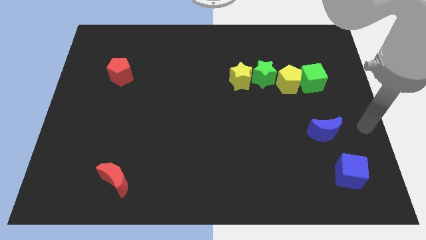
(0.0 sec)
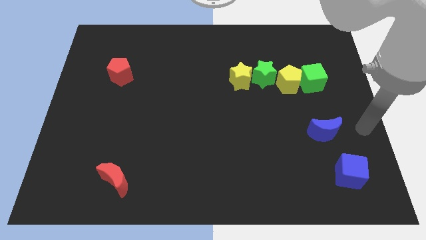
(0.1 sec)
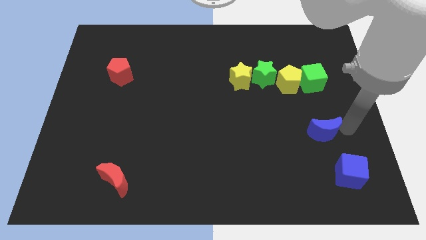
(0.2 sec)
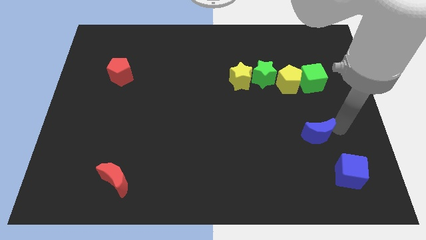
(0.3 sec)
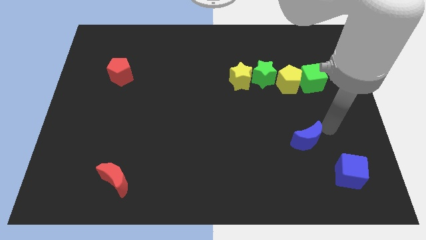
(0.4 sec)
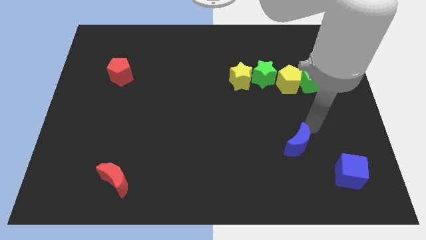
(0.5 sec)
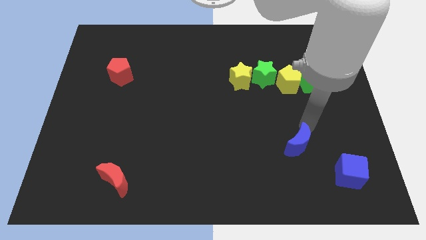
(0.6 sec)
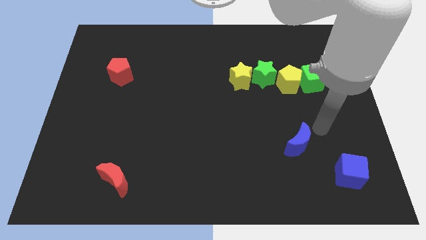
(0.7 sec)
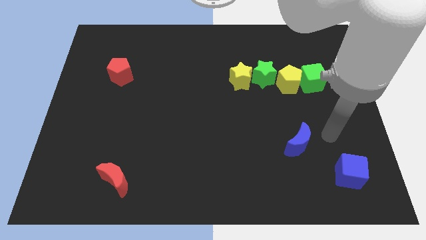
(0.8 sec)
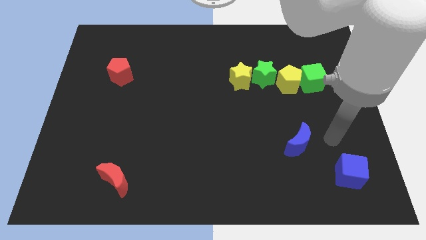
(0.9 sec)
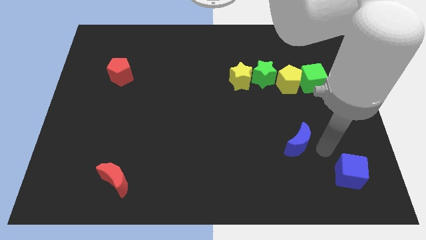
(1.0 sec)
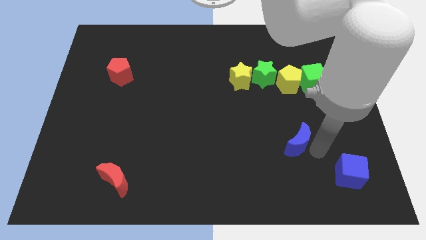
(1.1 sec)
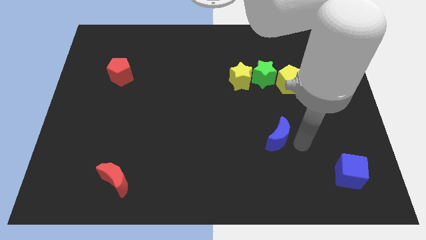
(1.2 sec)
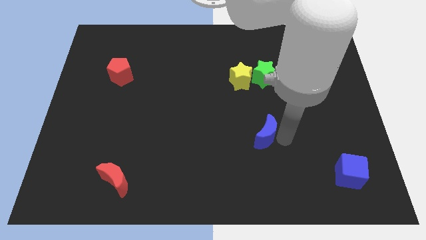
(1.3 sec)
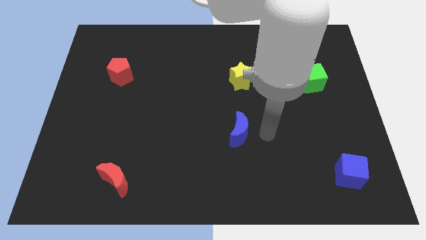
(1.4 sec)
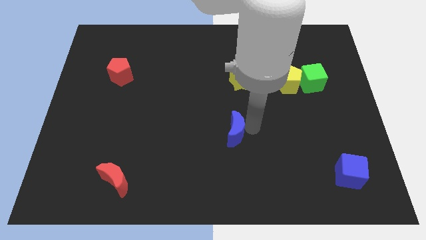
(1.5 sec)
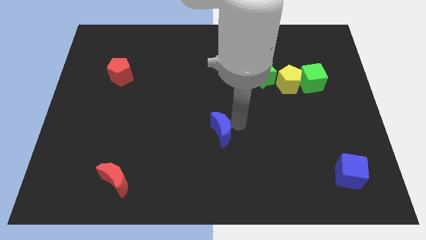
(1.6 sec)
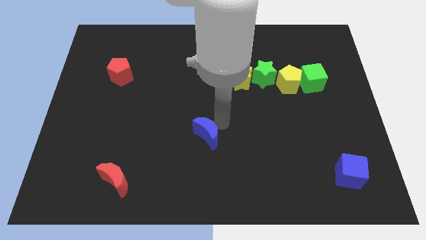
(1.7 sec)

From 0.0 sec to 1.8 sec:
push the blue crescent to the centre of the board

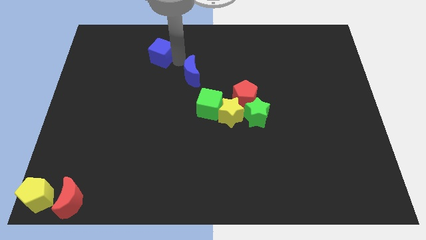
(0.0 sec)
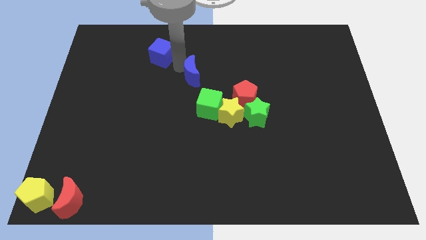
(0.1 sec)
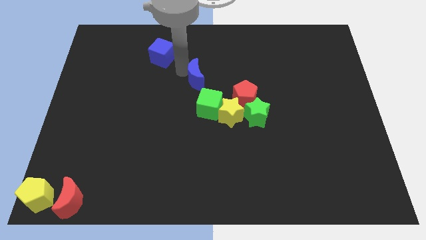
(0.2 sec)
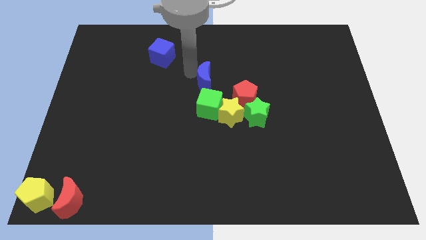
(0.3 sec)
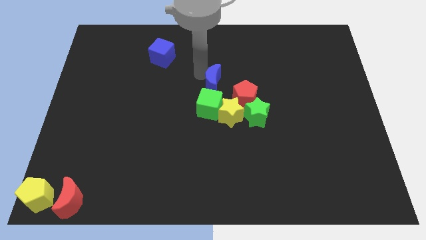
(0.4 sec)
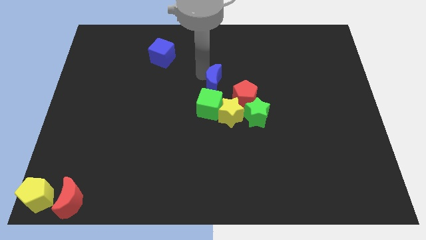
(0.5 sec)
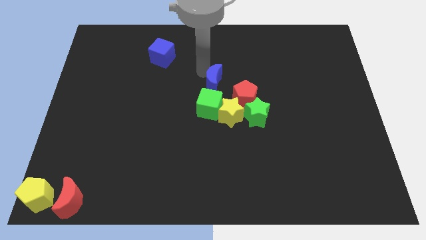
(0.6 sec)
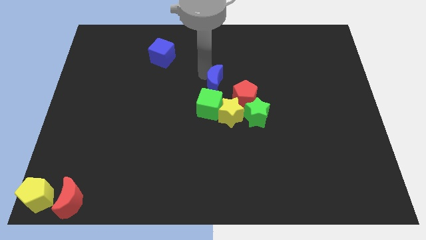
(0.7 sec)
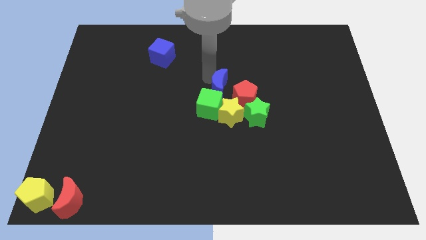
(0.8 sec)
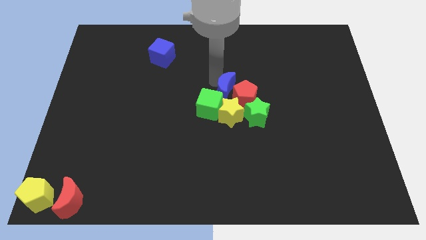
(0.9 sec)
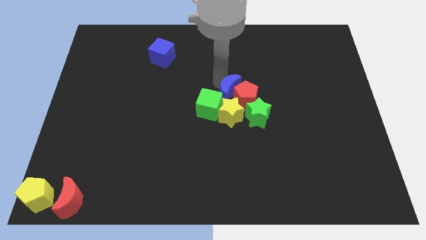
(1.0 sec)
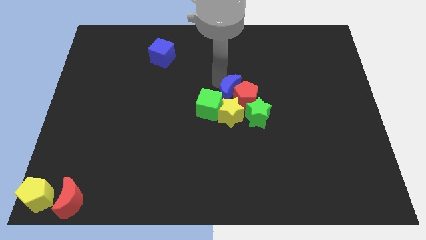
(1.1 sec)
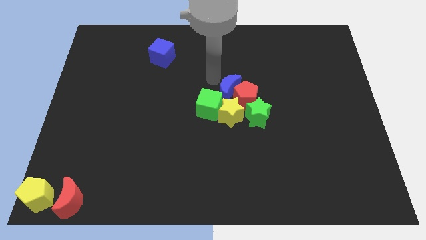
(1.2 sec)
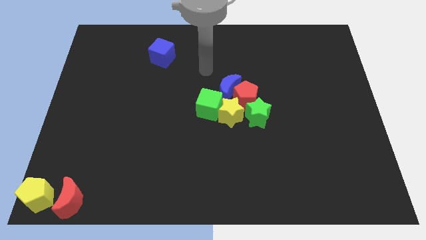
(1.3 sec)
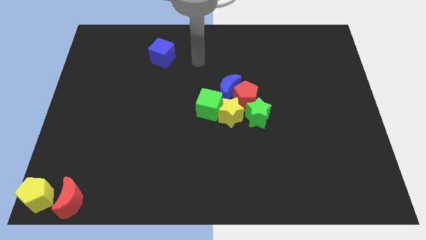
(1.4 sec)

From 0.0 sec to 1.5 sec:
move the blue moon into the red pentagon

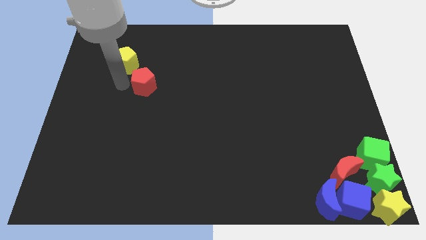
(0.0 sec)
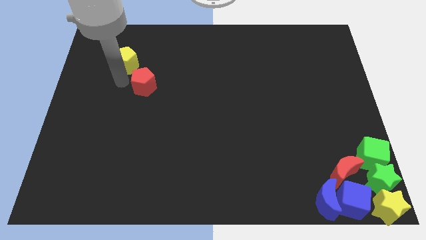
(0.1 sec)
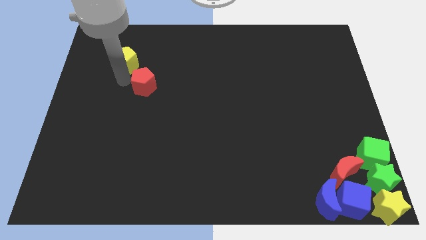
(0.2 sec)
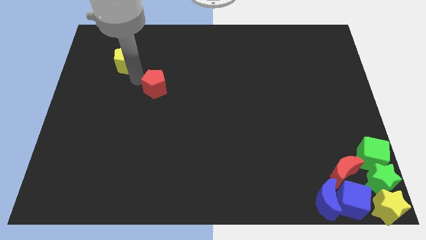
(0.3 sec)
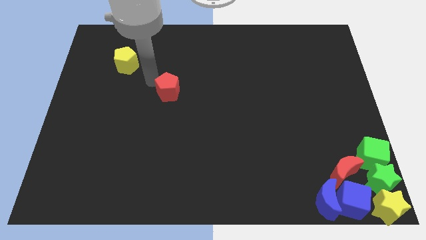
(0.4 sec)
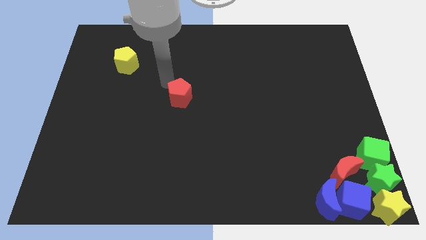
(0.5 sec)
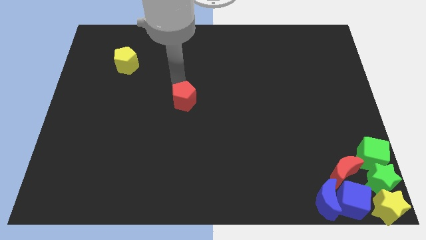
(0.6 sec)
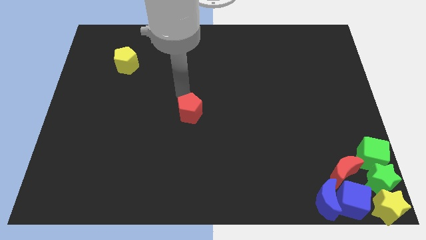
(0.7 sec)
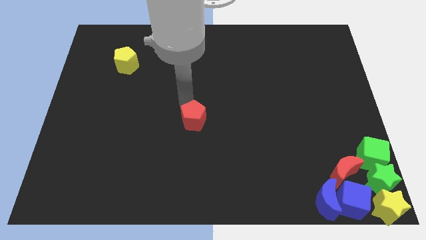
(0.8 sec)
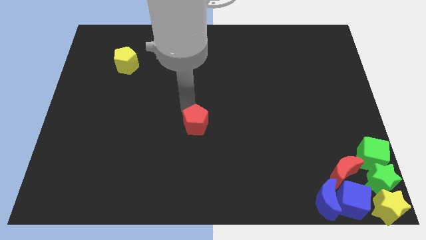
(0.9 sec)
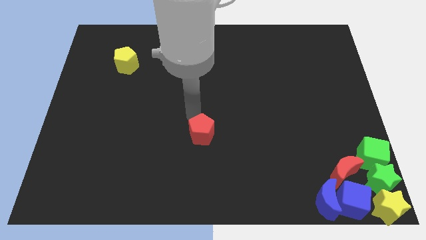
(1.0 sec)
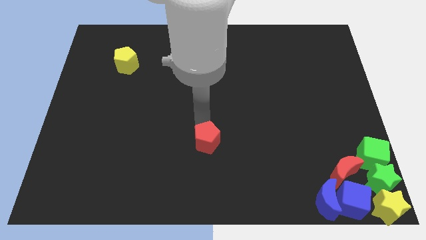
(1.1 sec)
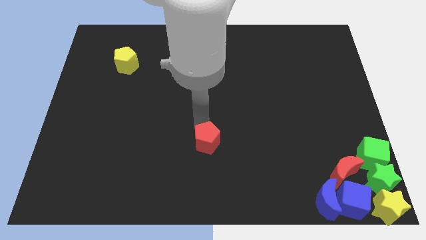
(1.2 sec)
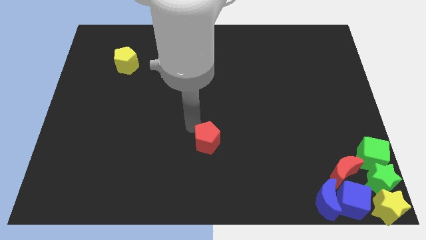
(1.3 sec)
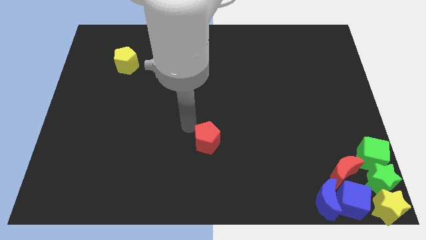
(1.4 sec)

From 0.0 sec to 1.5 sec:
move red pentagon towards the bottom center of the board

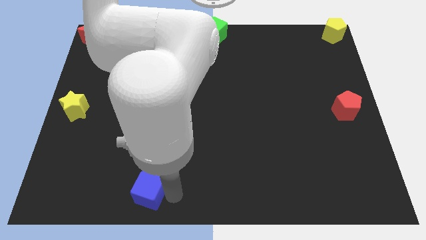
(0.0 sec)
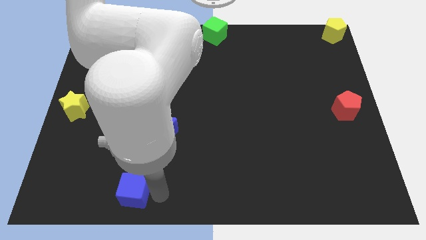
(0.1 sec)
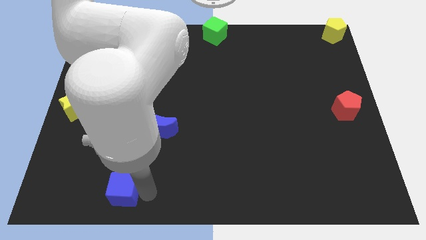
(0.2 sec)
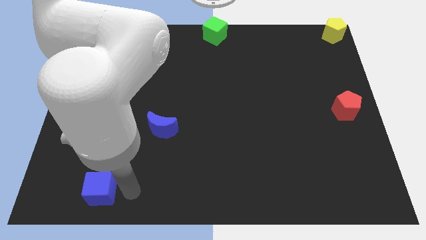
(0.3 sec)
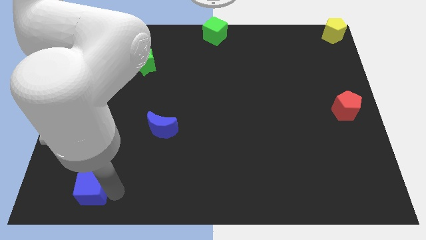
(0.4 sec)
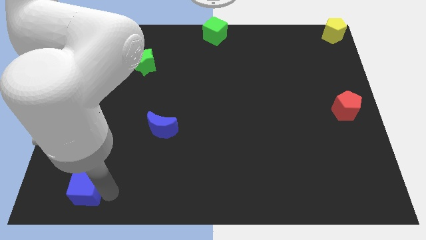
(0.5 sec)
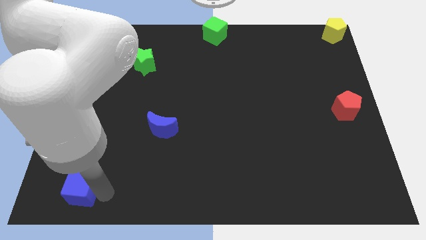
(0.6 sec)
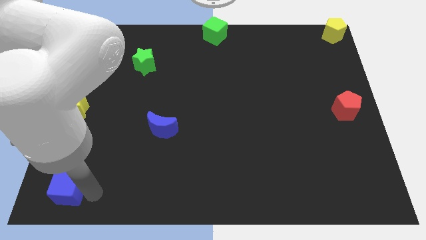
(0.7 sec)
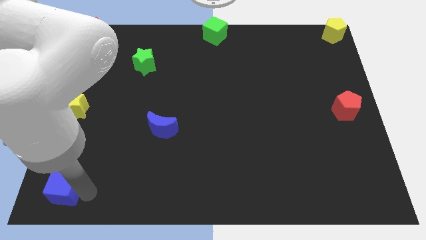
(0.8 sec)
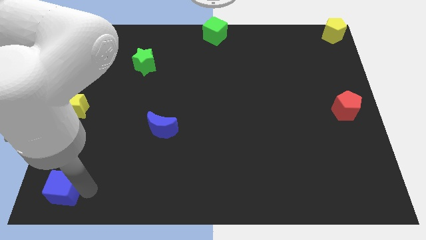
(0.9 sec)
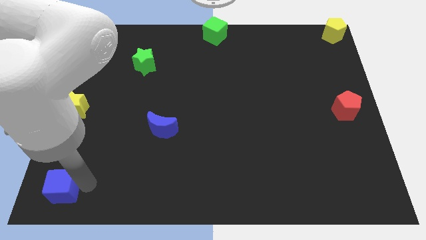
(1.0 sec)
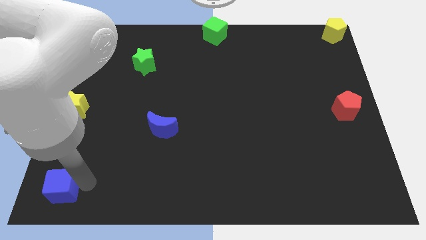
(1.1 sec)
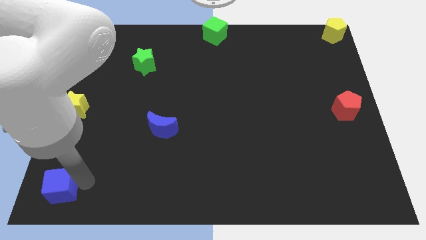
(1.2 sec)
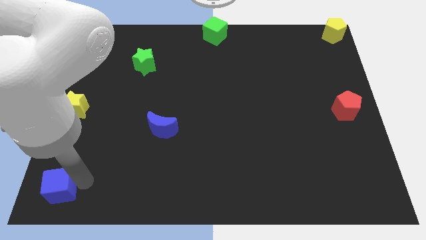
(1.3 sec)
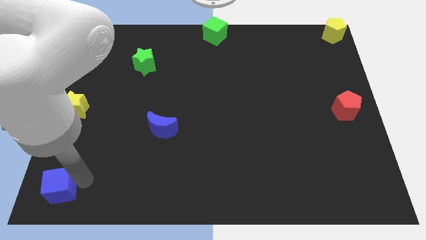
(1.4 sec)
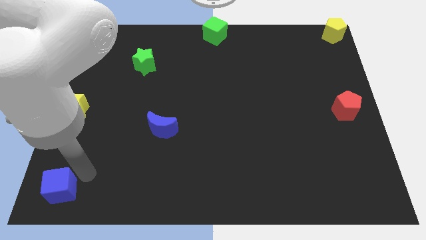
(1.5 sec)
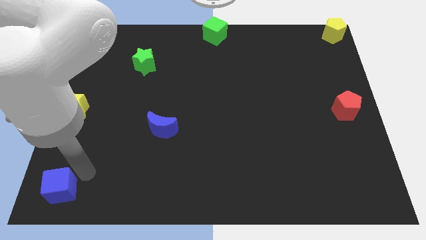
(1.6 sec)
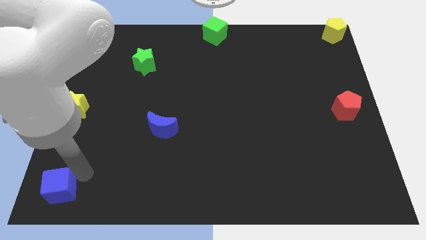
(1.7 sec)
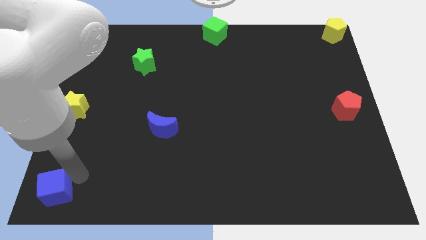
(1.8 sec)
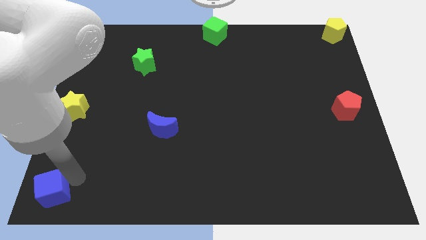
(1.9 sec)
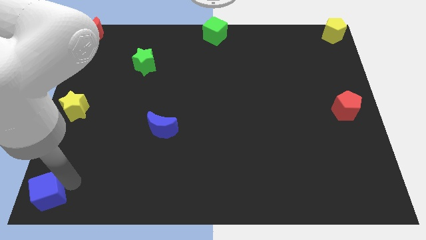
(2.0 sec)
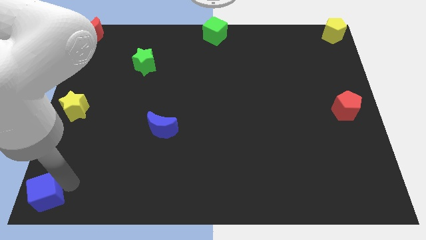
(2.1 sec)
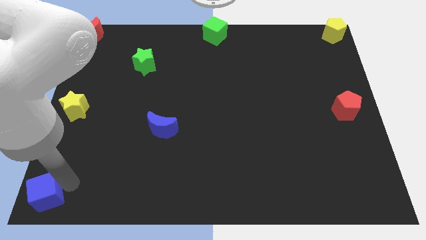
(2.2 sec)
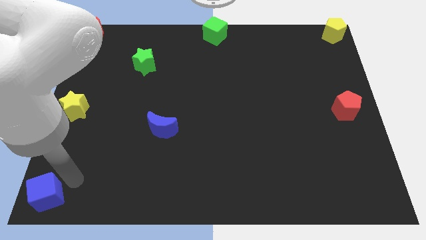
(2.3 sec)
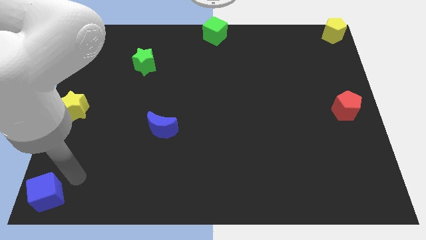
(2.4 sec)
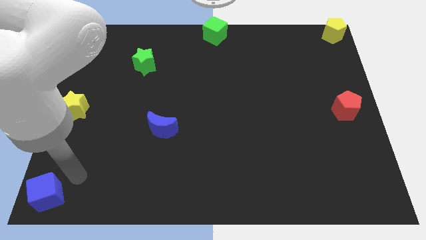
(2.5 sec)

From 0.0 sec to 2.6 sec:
place the blue cube at the bottom left corner

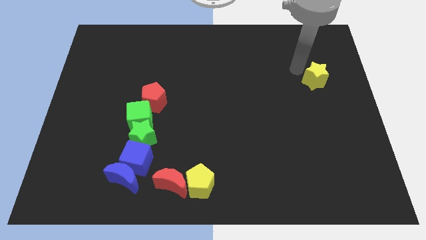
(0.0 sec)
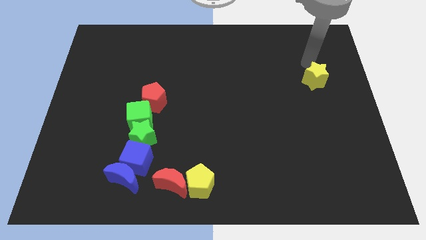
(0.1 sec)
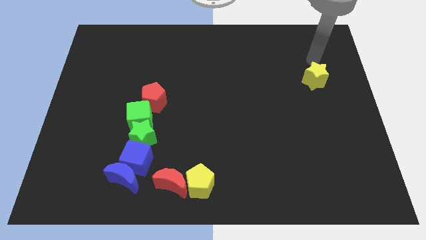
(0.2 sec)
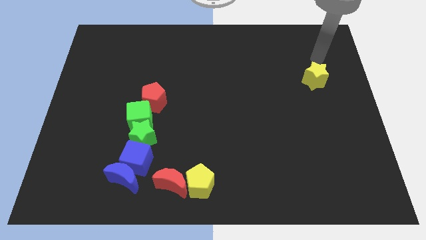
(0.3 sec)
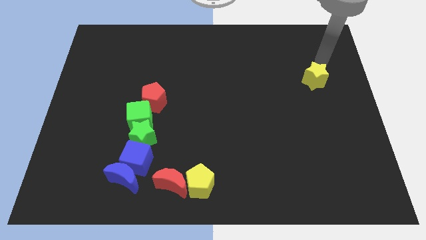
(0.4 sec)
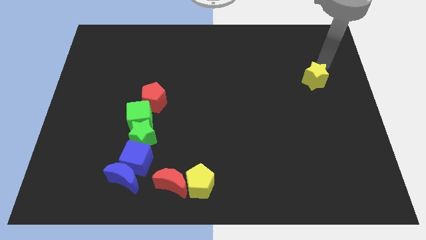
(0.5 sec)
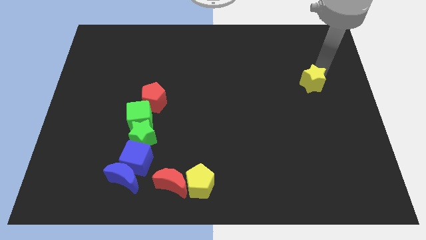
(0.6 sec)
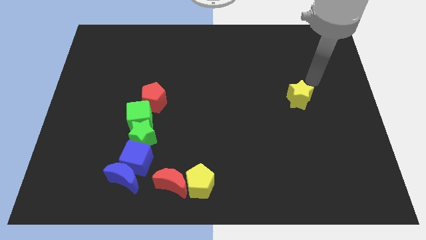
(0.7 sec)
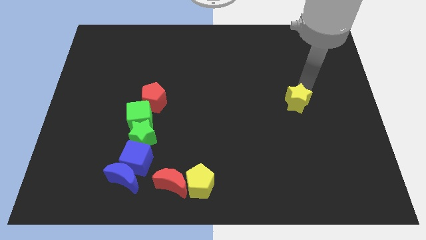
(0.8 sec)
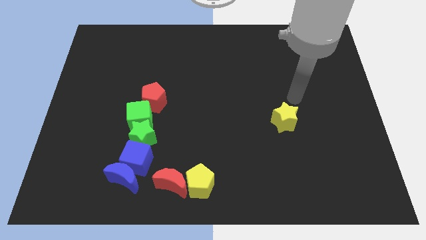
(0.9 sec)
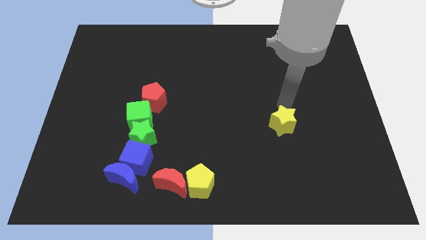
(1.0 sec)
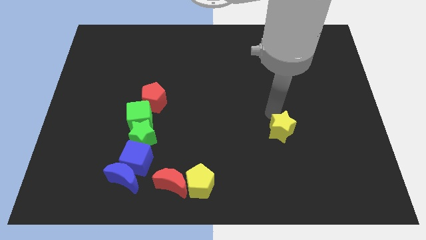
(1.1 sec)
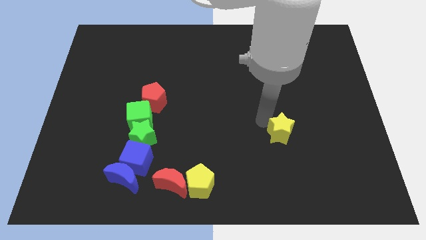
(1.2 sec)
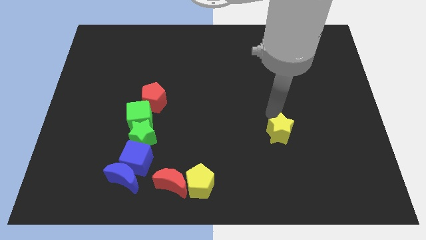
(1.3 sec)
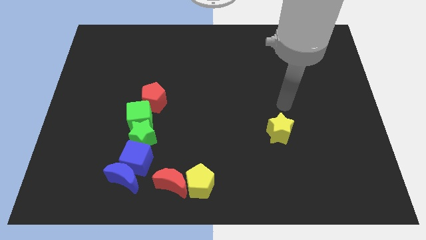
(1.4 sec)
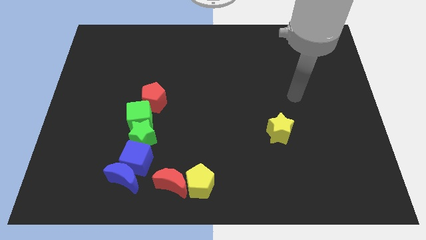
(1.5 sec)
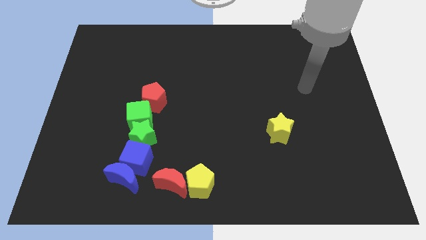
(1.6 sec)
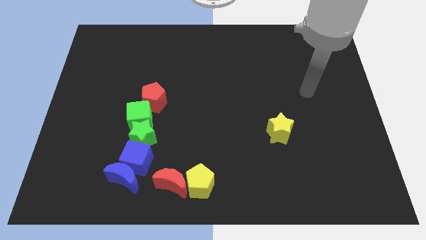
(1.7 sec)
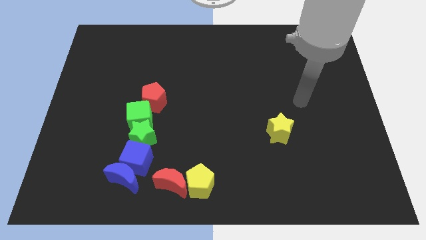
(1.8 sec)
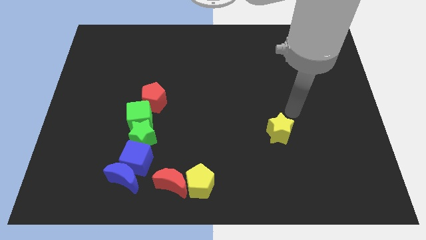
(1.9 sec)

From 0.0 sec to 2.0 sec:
move the yellow star towards the bottom side
